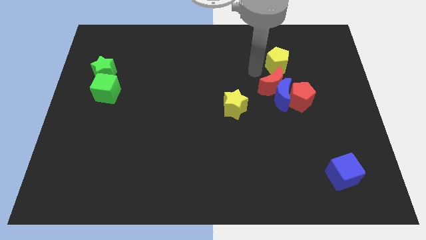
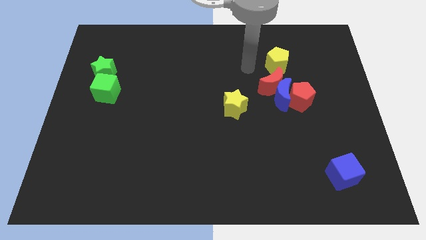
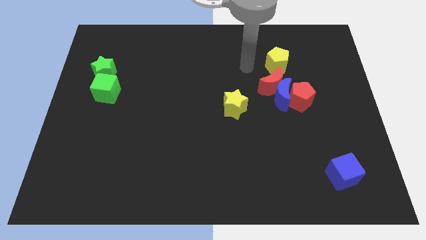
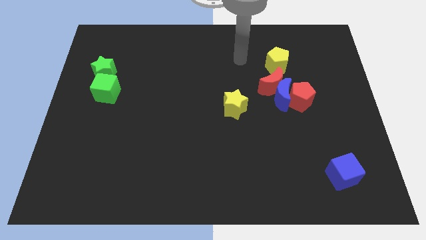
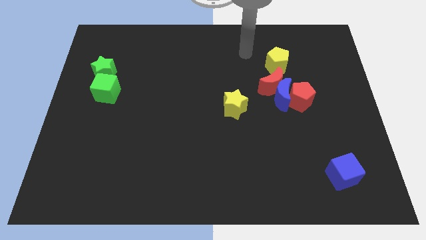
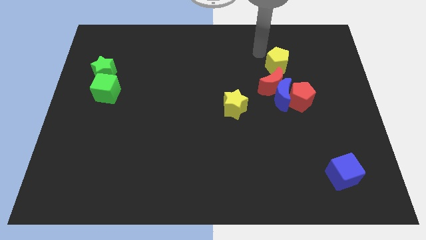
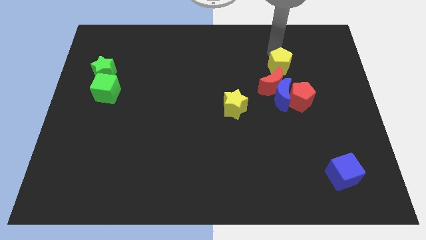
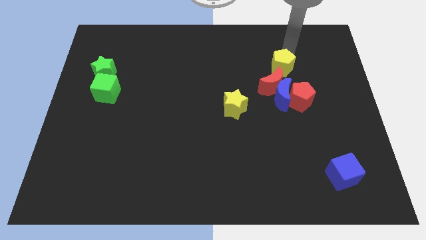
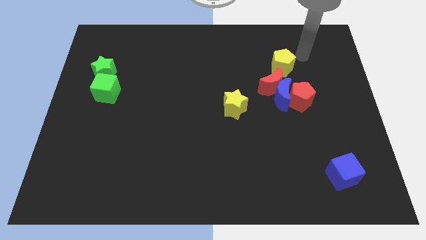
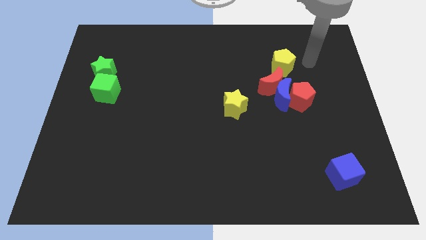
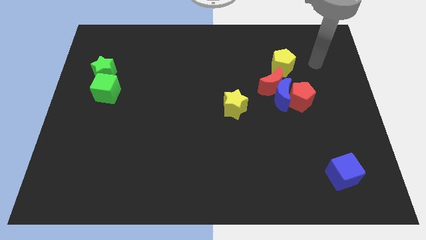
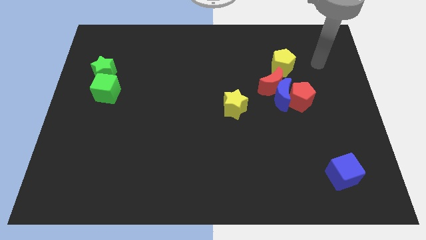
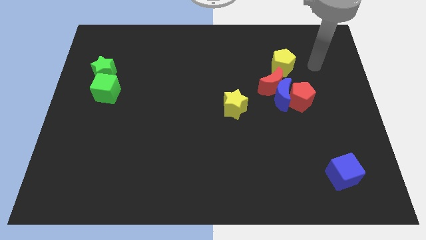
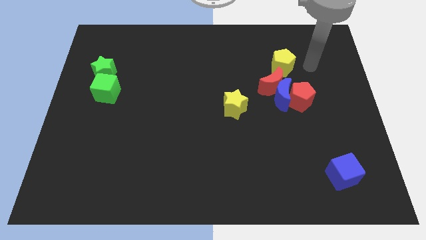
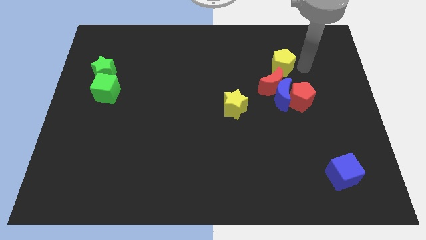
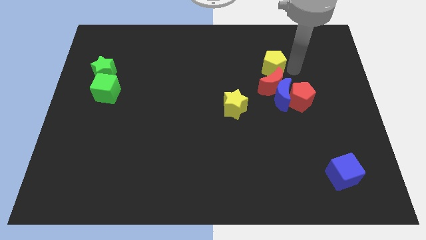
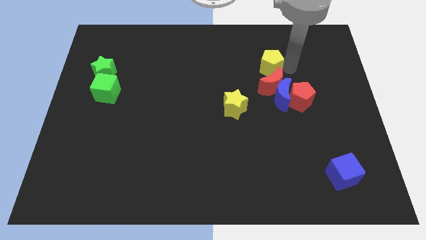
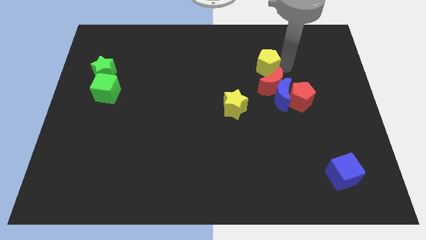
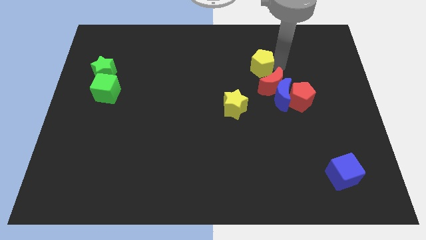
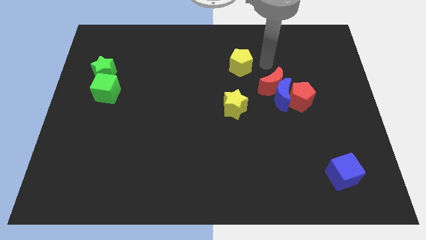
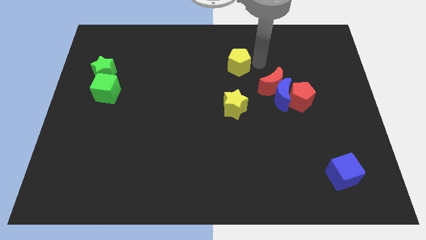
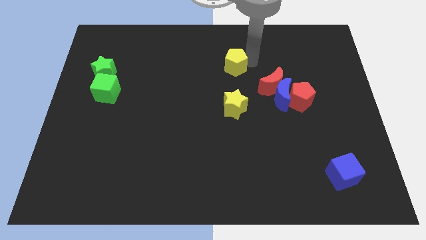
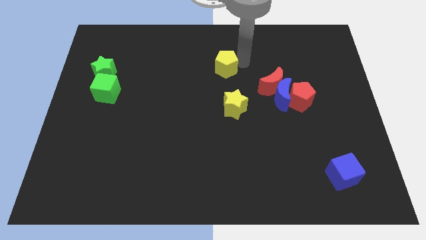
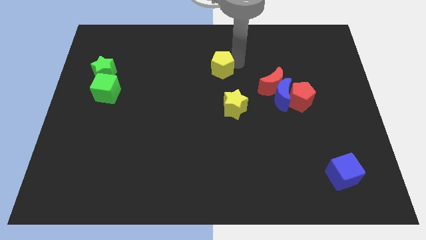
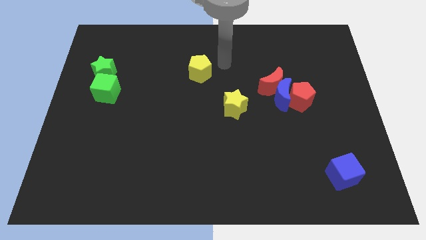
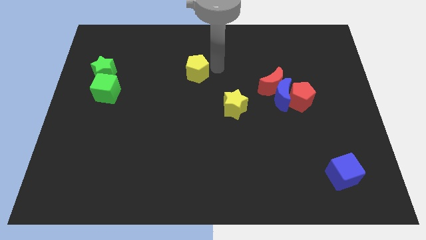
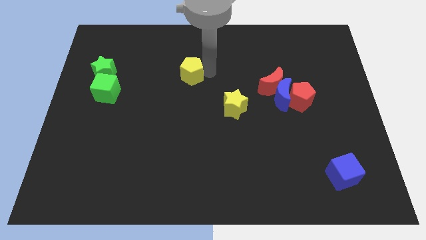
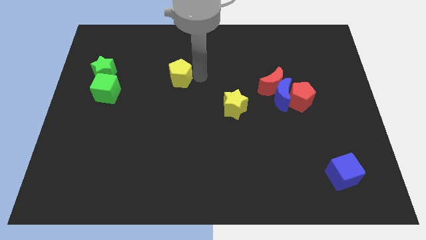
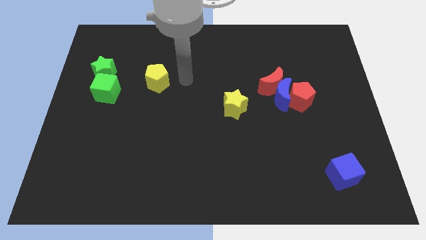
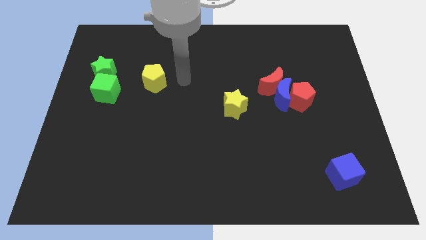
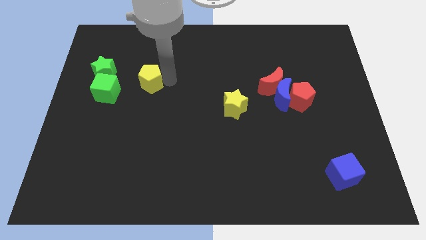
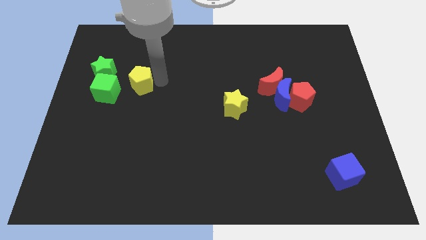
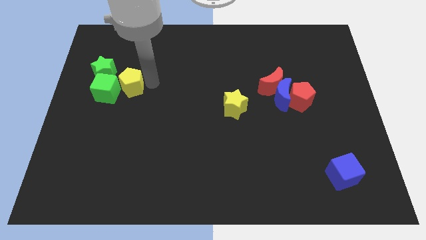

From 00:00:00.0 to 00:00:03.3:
move the yellow pentagon to the right of the green blocks

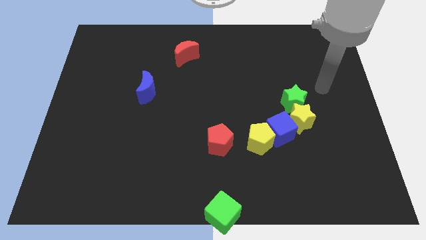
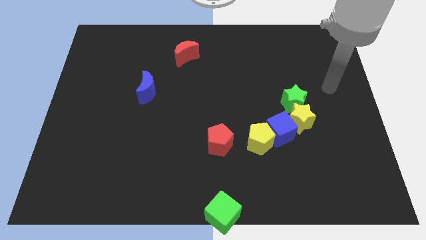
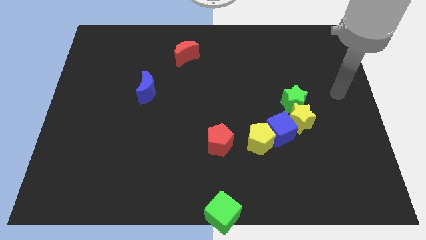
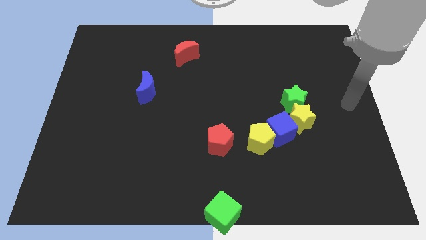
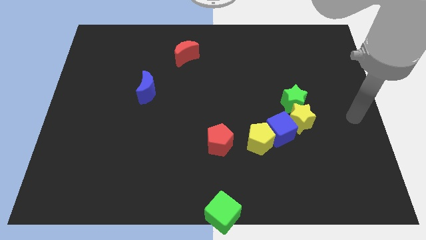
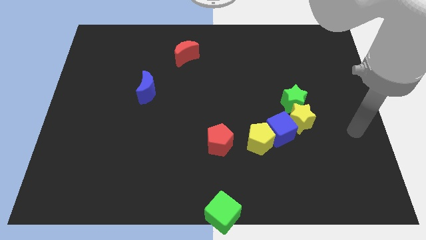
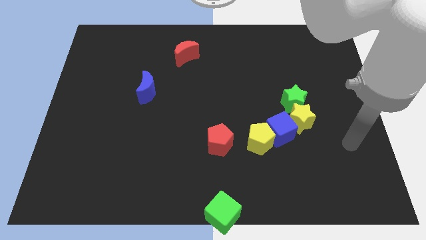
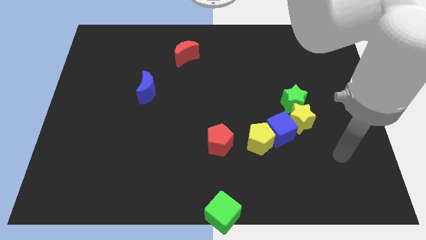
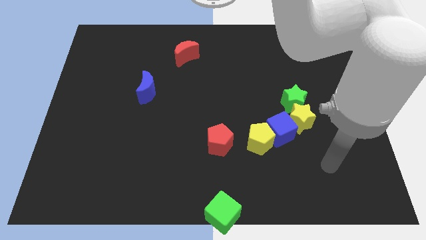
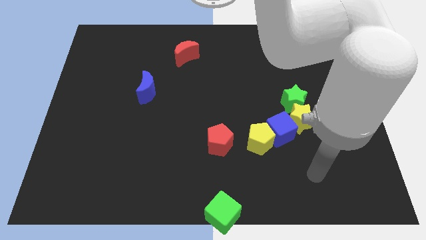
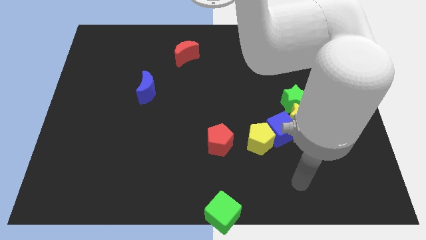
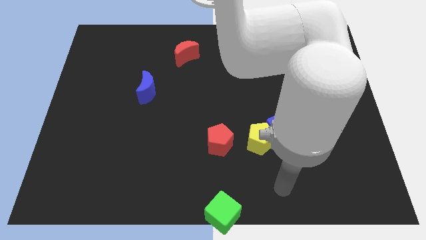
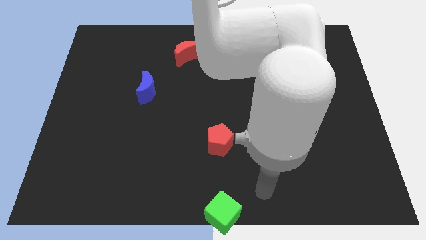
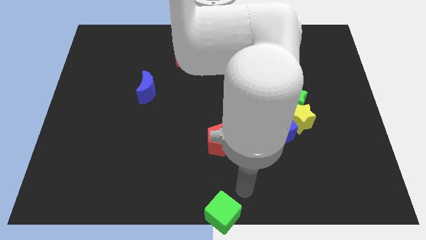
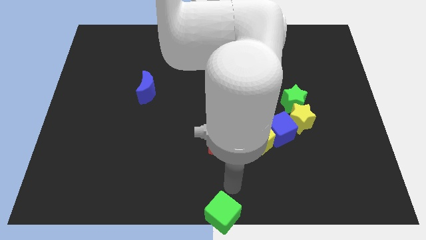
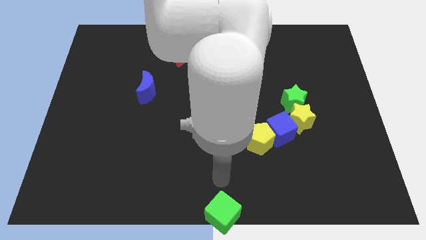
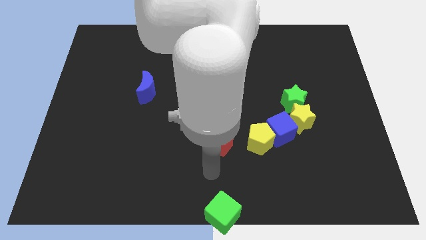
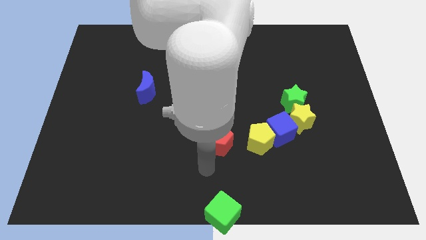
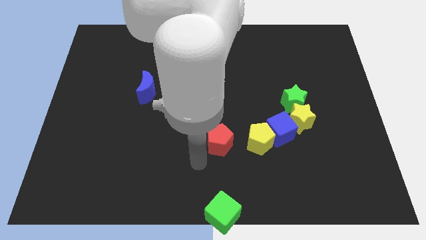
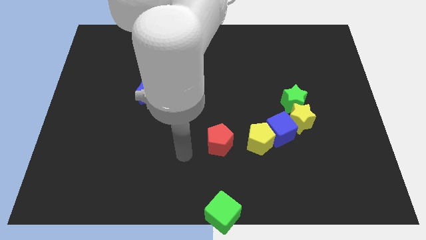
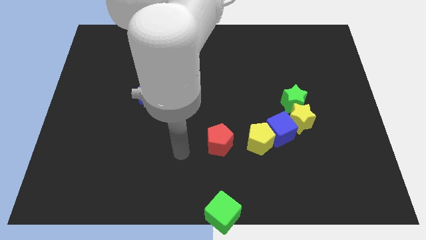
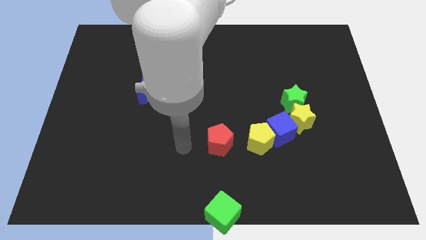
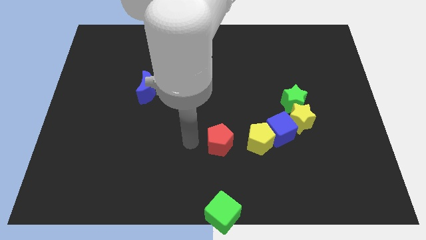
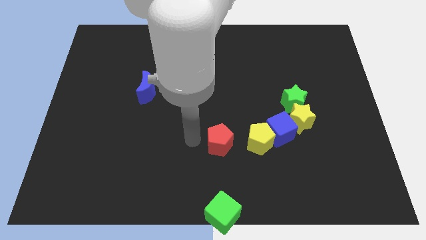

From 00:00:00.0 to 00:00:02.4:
move your arm to the left of the red pentagon

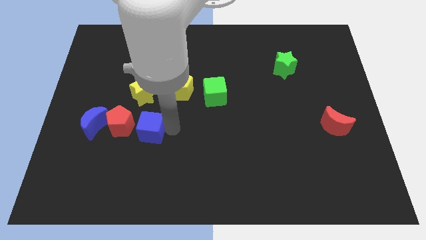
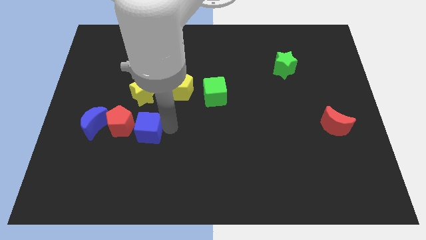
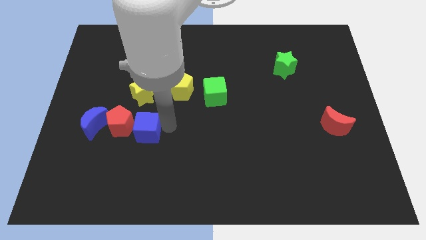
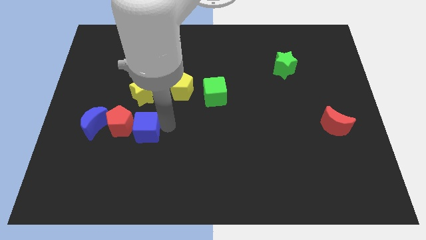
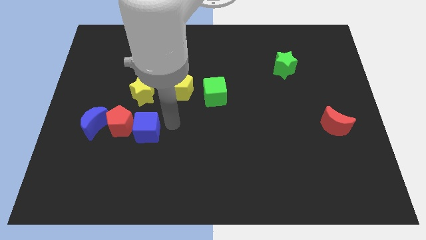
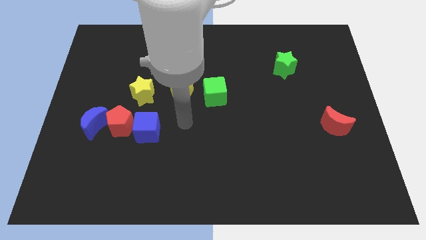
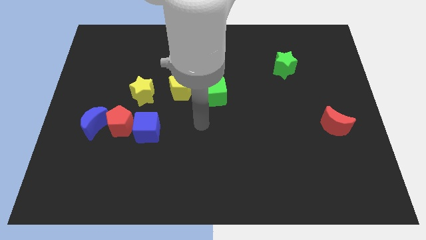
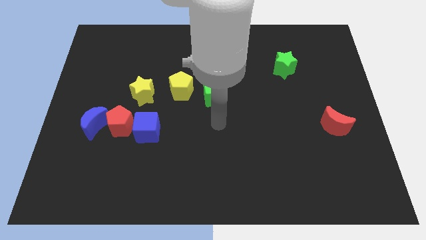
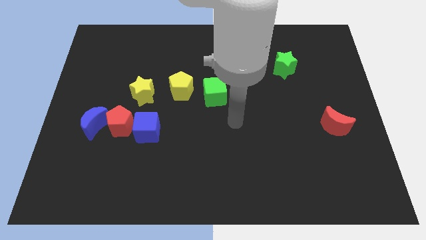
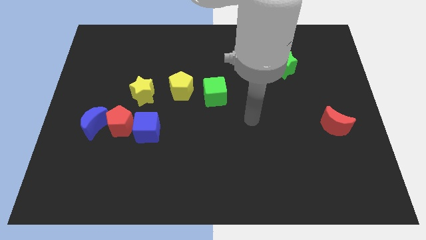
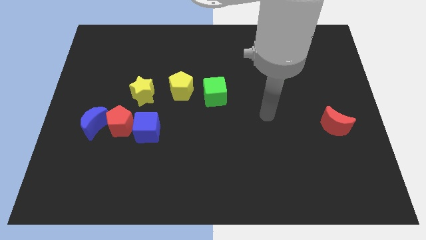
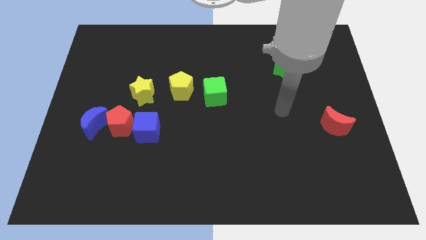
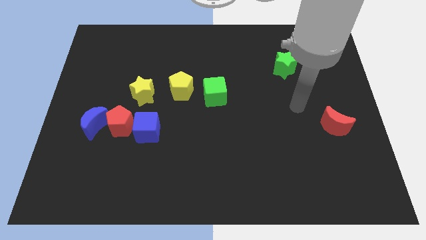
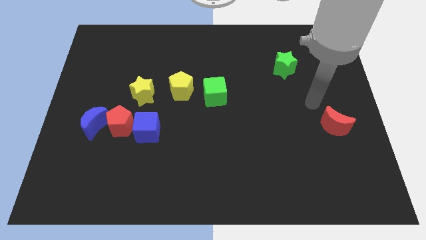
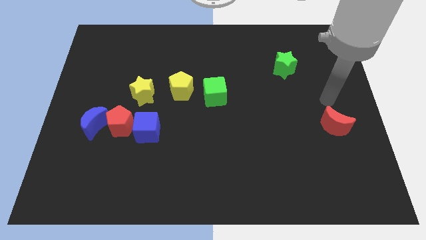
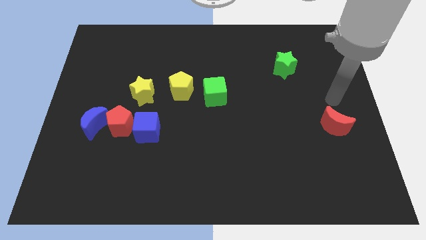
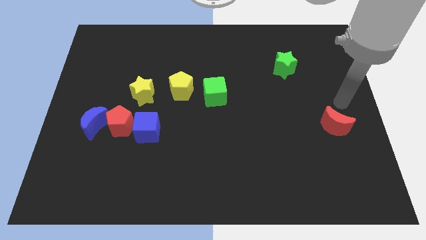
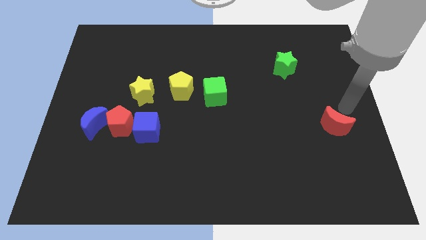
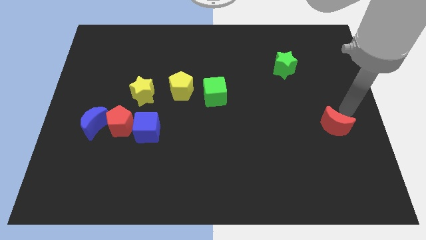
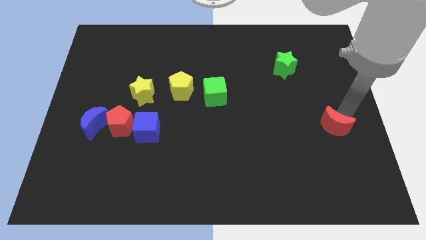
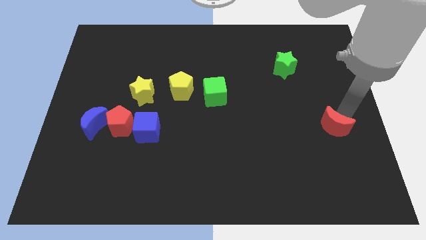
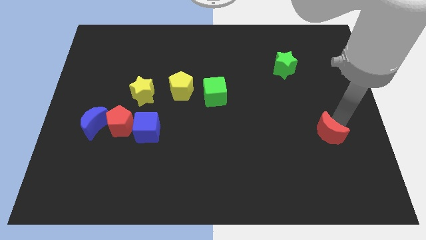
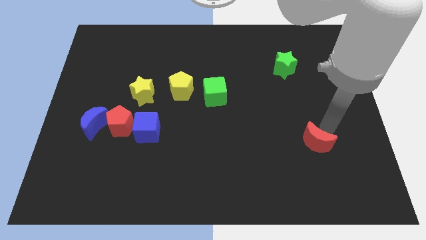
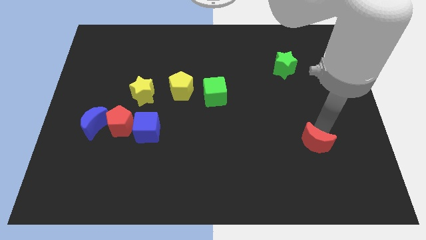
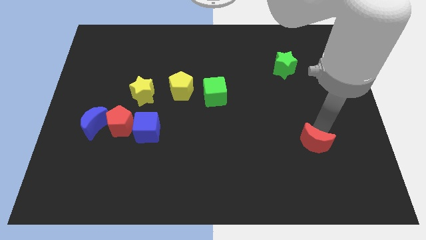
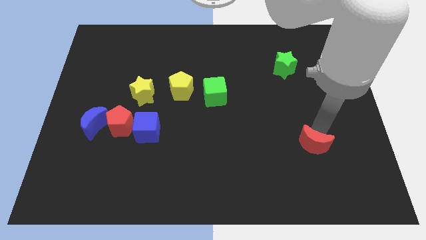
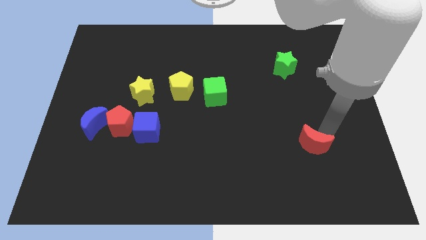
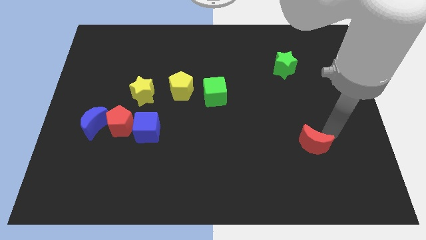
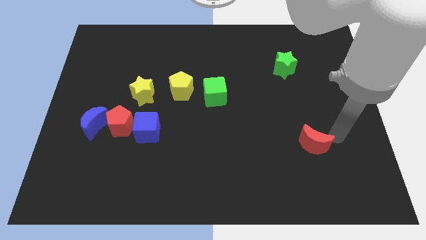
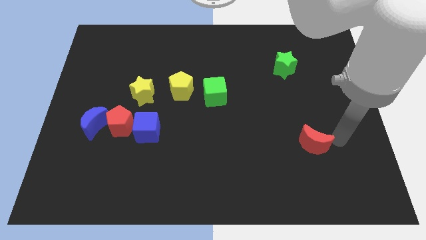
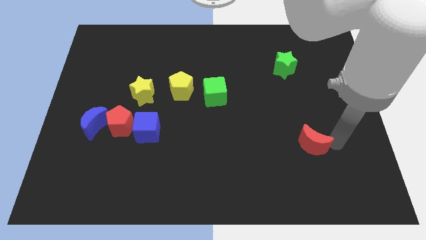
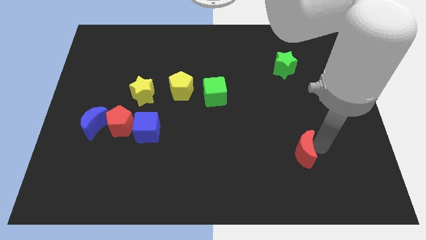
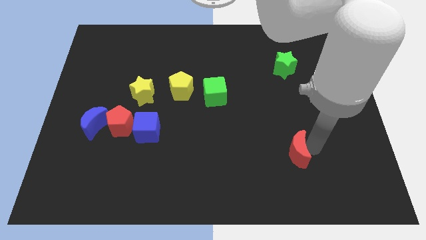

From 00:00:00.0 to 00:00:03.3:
place the red moon below the green star
